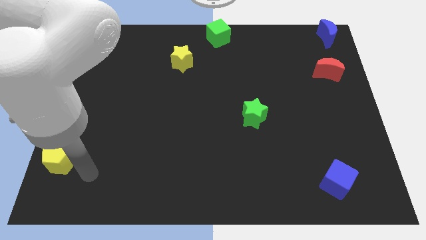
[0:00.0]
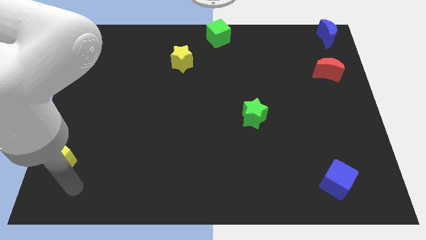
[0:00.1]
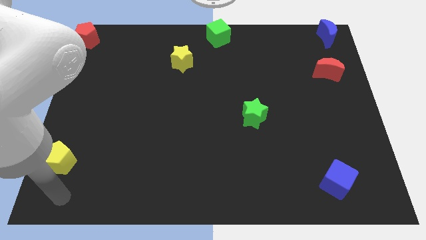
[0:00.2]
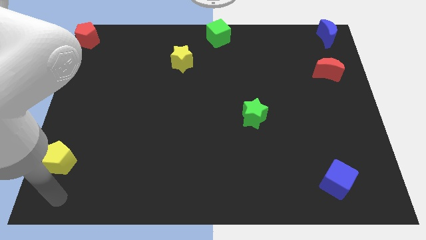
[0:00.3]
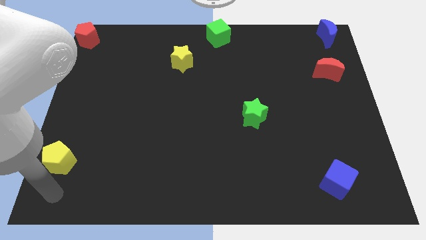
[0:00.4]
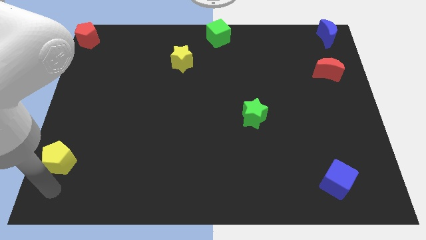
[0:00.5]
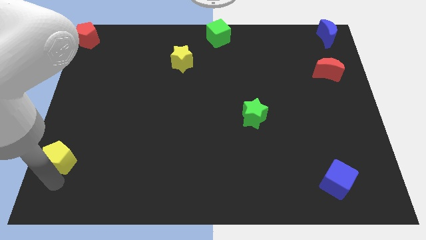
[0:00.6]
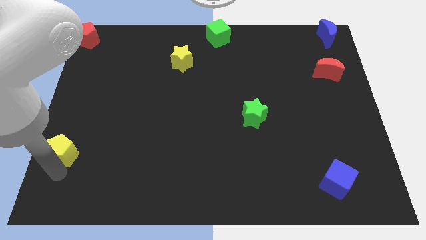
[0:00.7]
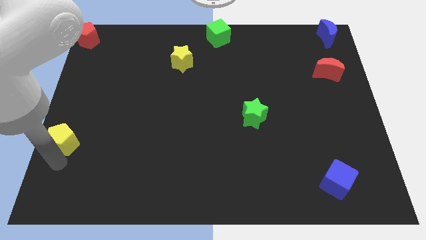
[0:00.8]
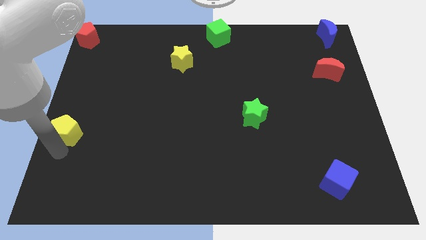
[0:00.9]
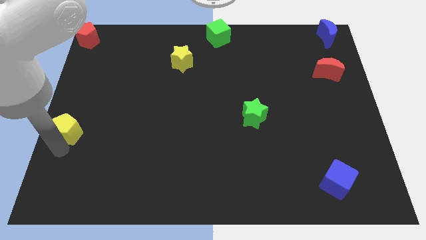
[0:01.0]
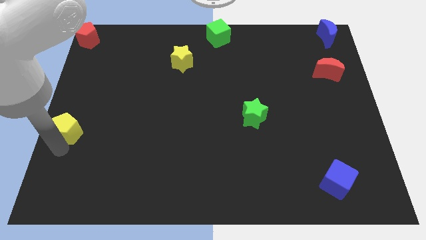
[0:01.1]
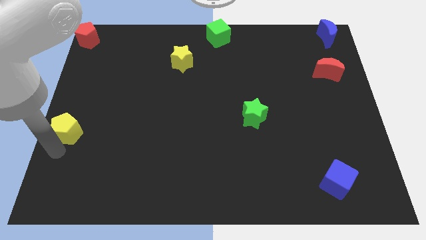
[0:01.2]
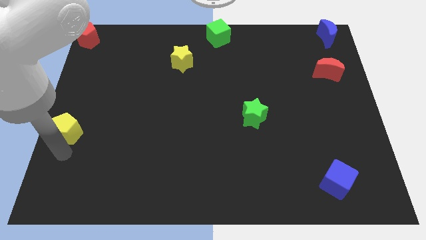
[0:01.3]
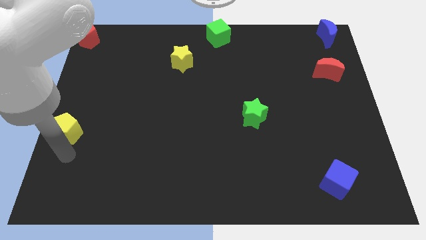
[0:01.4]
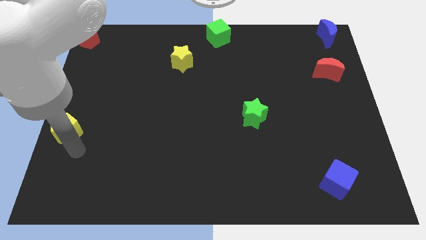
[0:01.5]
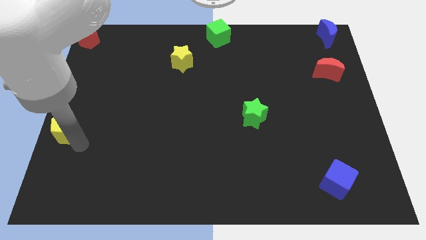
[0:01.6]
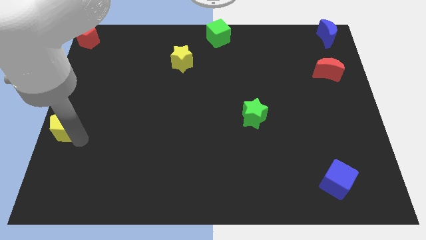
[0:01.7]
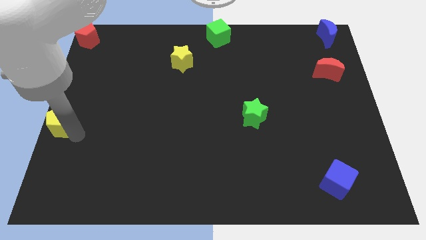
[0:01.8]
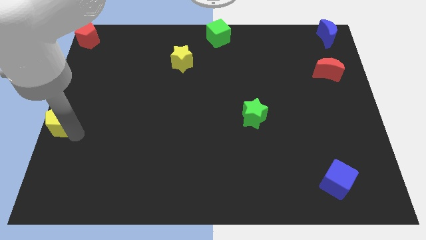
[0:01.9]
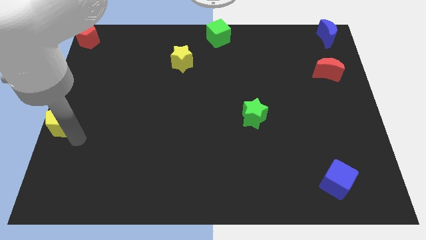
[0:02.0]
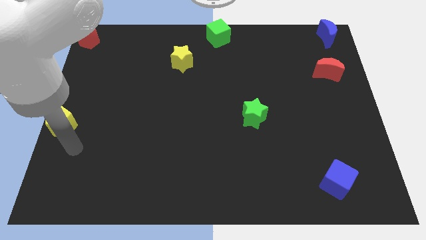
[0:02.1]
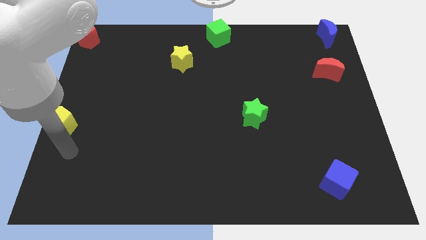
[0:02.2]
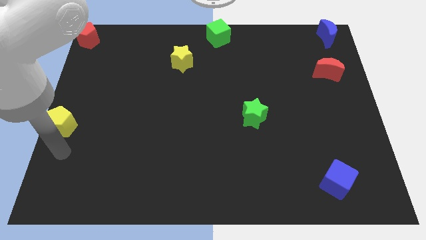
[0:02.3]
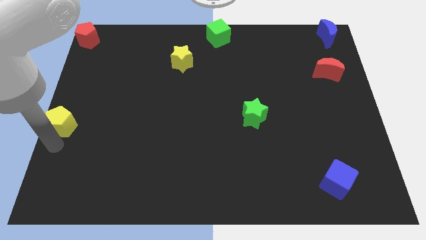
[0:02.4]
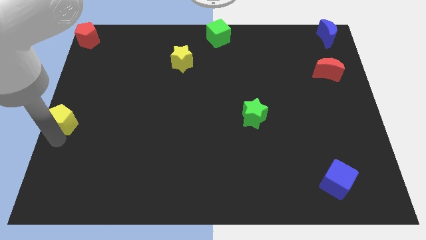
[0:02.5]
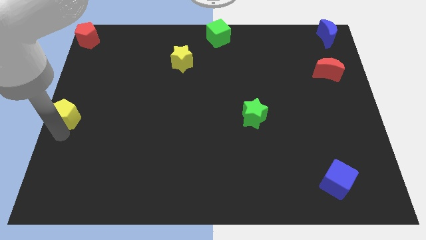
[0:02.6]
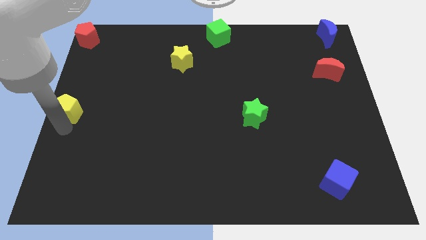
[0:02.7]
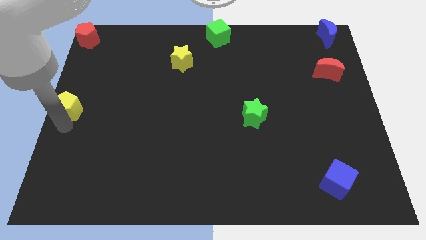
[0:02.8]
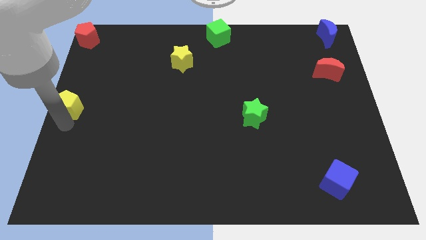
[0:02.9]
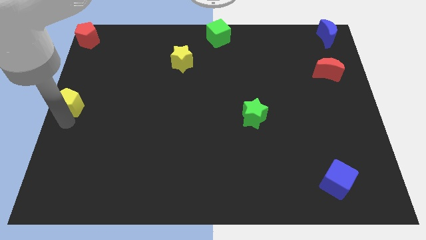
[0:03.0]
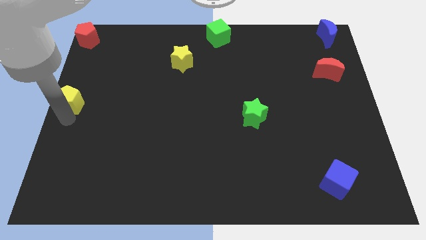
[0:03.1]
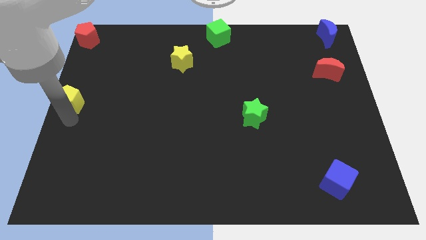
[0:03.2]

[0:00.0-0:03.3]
move the yellow pentagon to the center left of the table

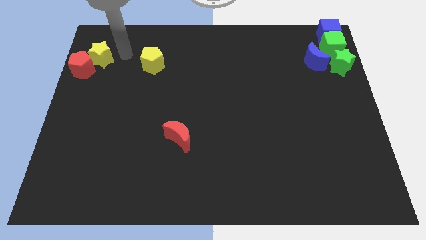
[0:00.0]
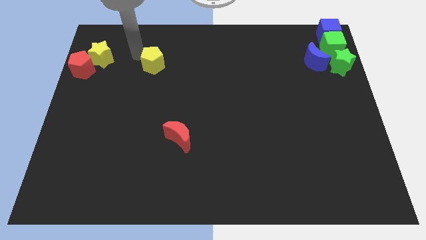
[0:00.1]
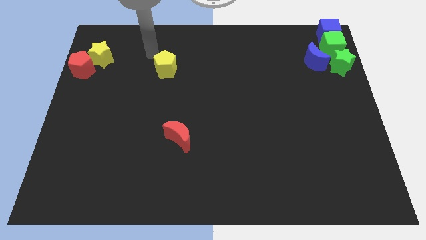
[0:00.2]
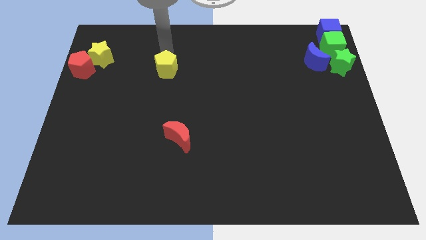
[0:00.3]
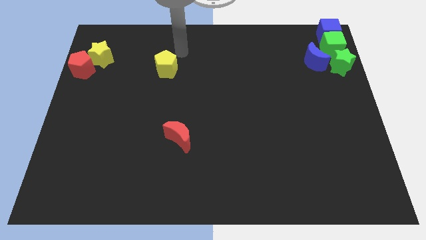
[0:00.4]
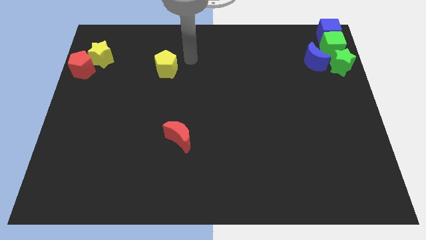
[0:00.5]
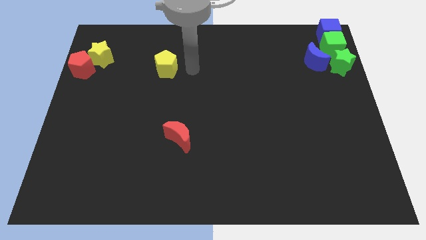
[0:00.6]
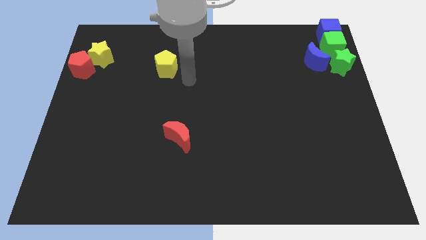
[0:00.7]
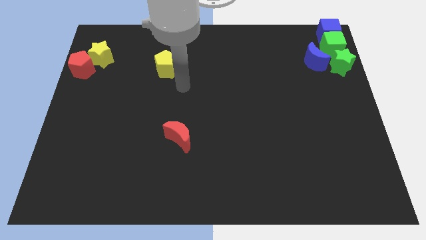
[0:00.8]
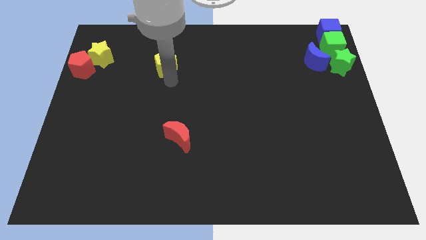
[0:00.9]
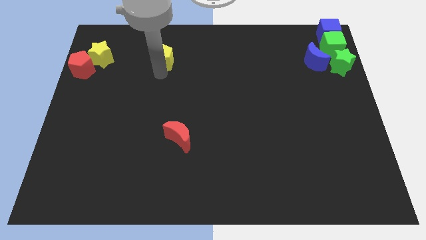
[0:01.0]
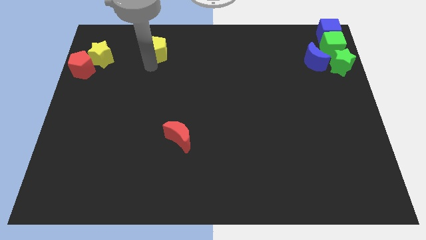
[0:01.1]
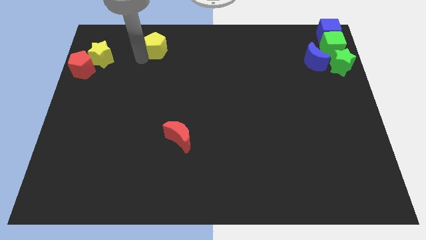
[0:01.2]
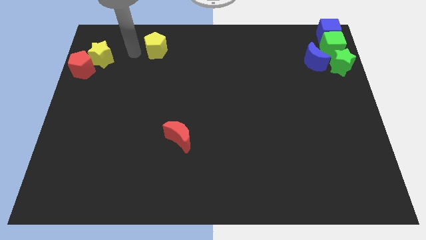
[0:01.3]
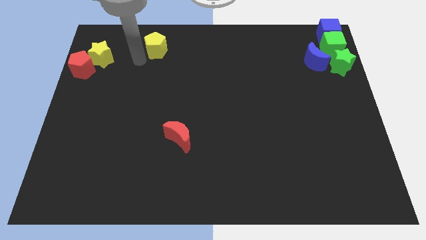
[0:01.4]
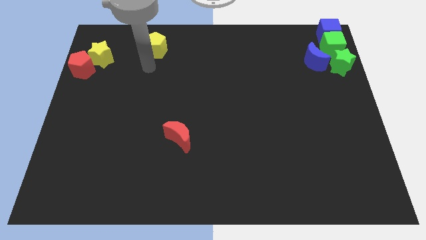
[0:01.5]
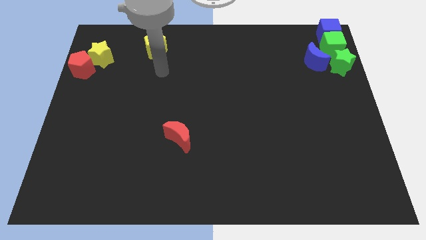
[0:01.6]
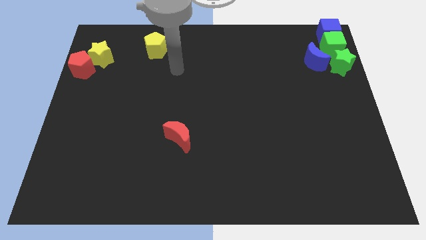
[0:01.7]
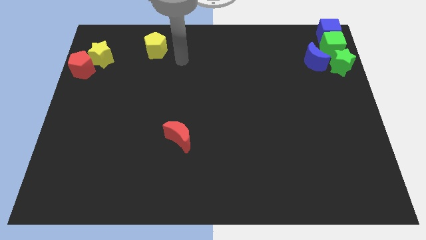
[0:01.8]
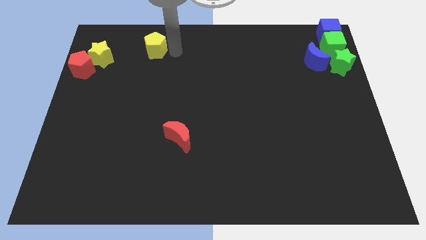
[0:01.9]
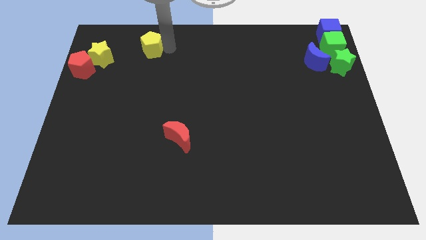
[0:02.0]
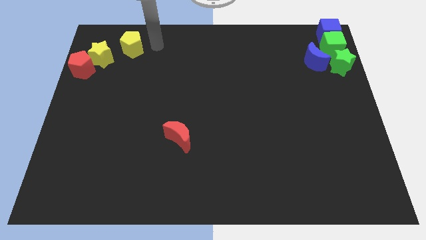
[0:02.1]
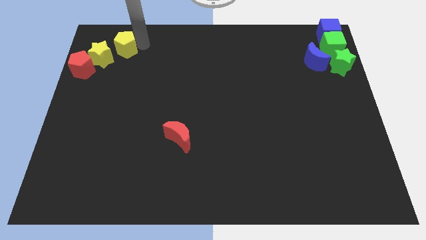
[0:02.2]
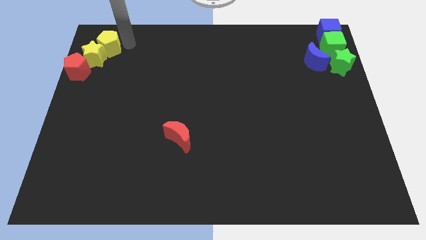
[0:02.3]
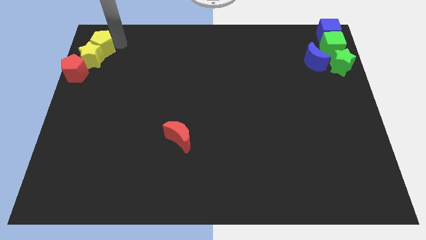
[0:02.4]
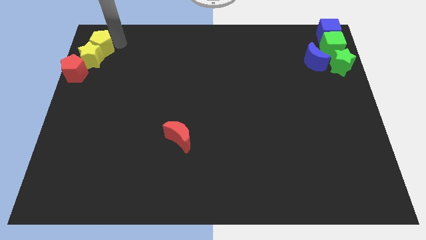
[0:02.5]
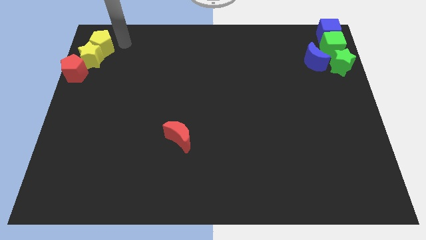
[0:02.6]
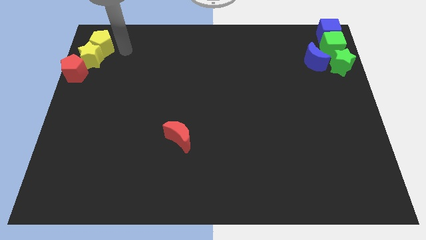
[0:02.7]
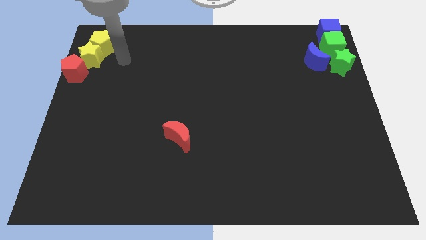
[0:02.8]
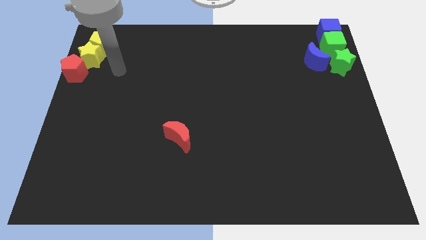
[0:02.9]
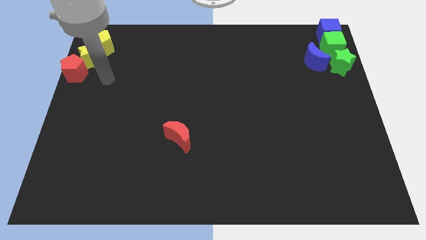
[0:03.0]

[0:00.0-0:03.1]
move the yellow pentagon into top of the yellow star

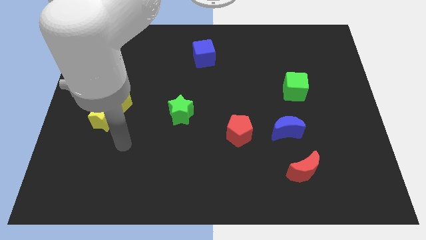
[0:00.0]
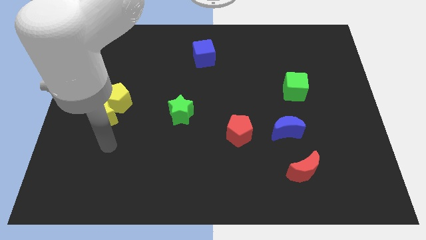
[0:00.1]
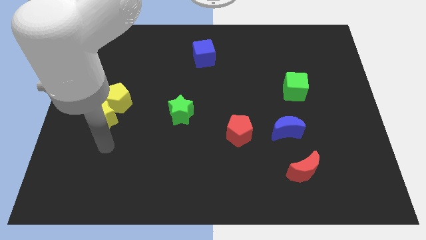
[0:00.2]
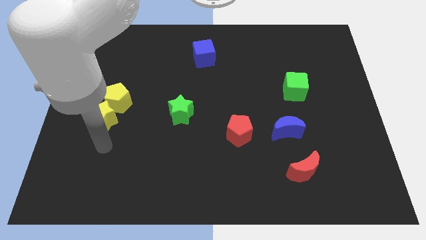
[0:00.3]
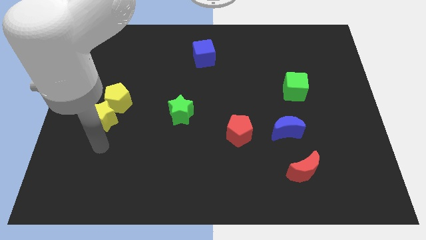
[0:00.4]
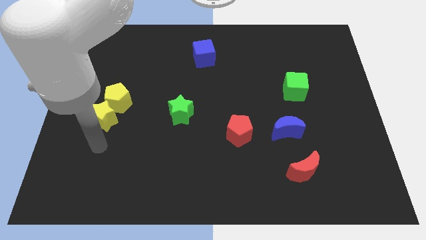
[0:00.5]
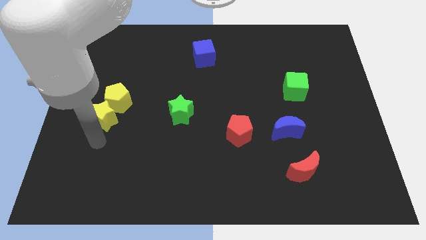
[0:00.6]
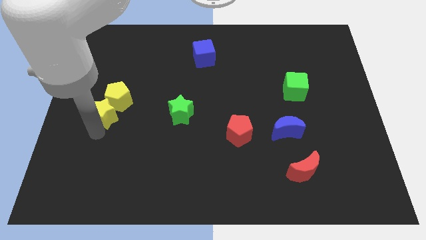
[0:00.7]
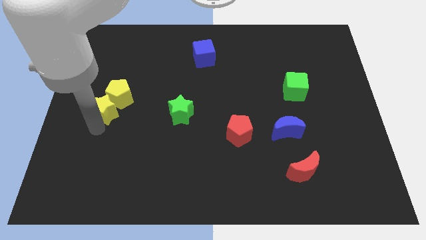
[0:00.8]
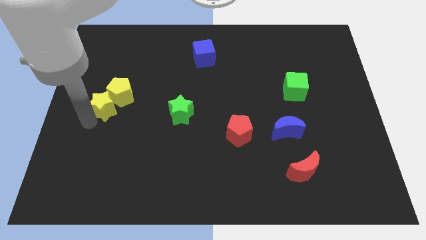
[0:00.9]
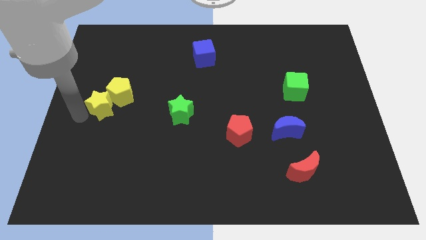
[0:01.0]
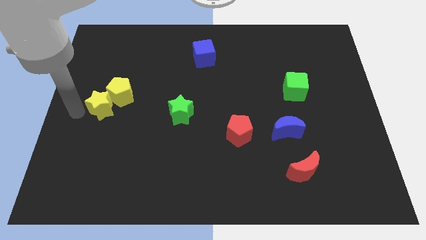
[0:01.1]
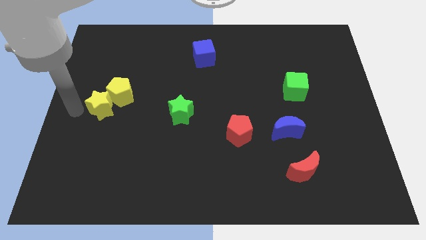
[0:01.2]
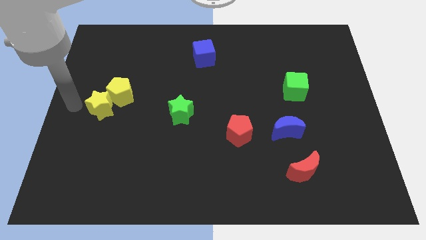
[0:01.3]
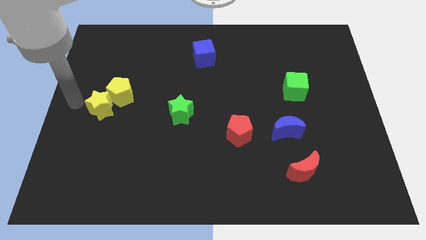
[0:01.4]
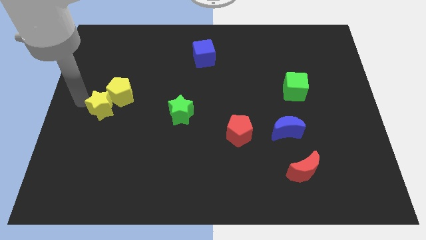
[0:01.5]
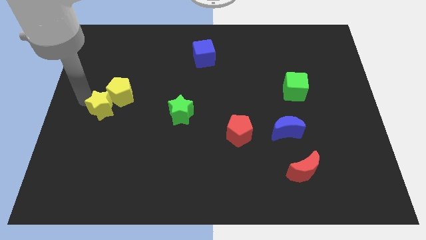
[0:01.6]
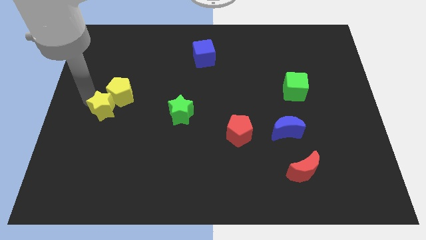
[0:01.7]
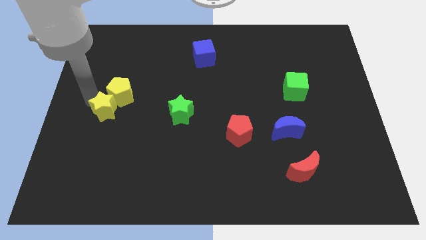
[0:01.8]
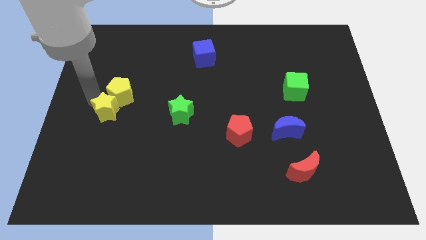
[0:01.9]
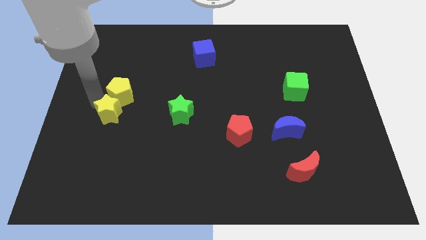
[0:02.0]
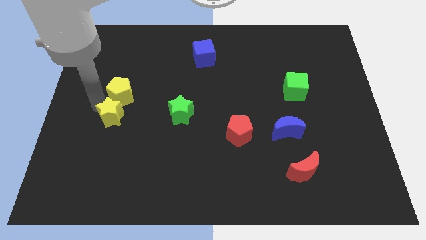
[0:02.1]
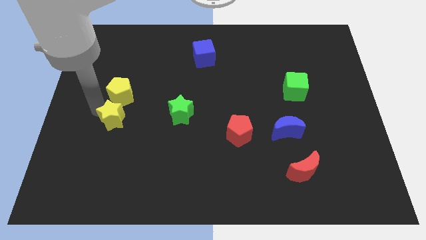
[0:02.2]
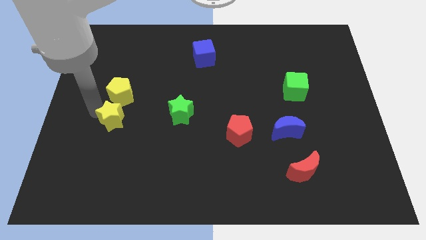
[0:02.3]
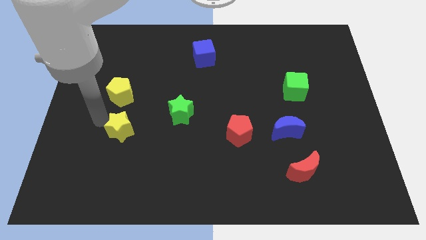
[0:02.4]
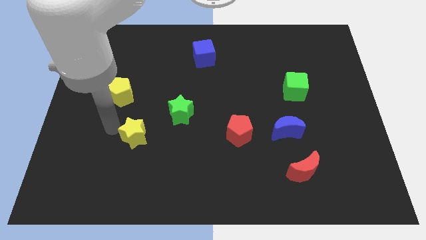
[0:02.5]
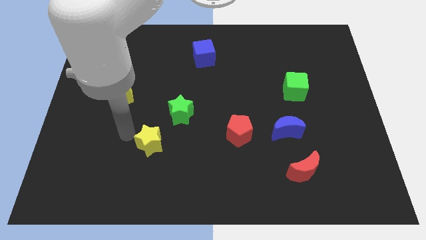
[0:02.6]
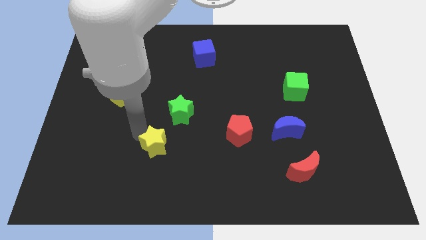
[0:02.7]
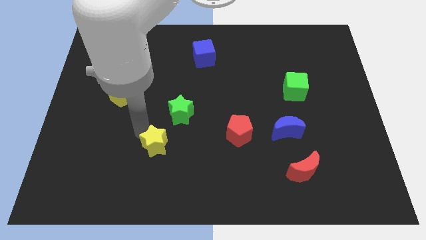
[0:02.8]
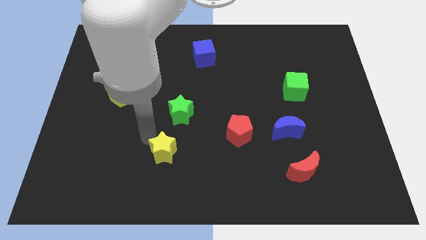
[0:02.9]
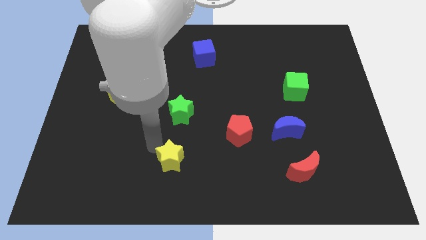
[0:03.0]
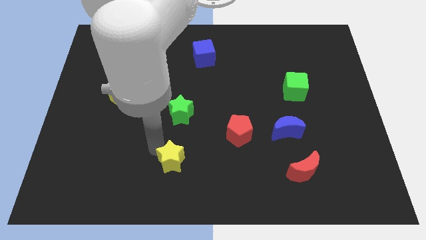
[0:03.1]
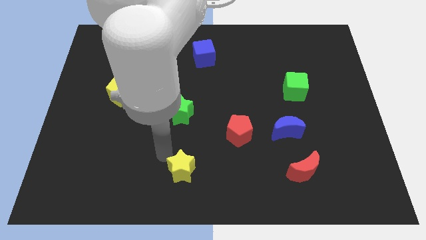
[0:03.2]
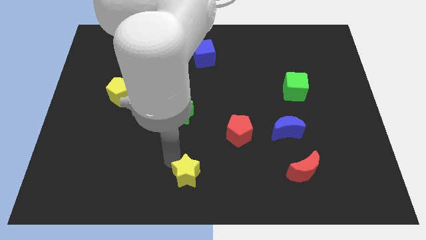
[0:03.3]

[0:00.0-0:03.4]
place the yellow star below the green star
